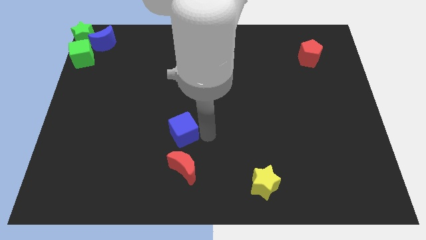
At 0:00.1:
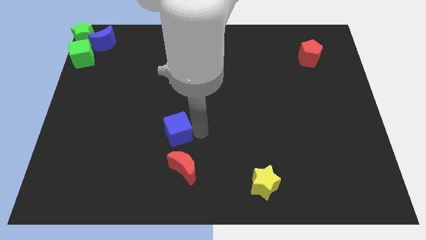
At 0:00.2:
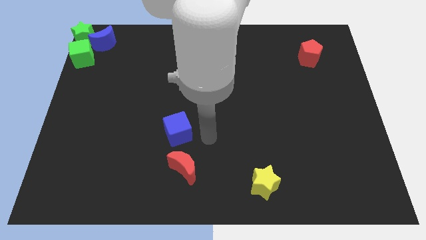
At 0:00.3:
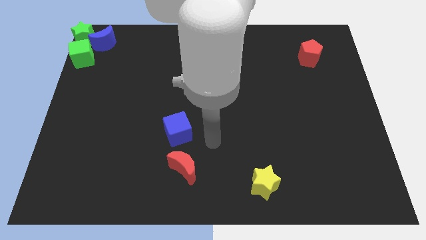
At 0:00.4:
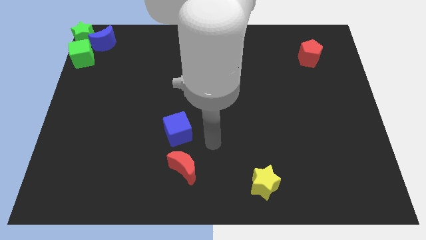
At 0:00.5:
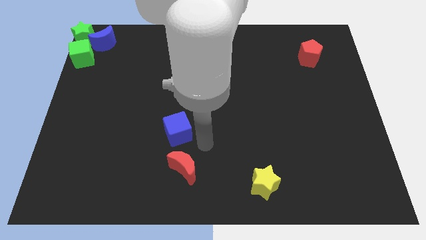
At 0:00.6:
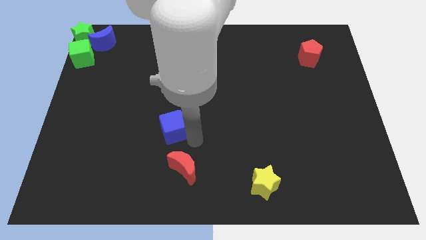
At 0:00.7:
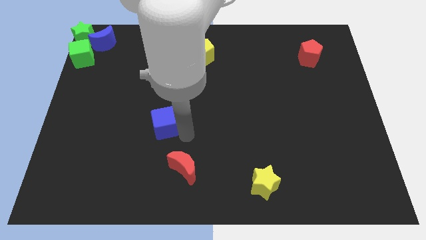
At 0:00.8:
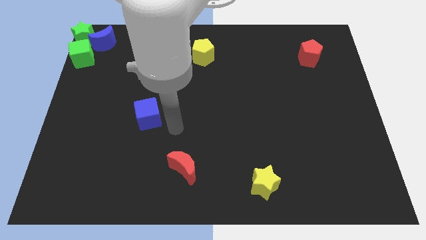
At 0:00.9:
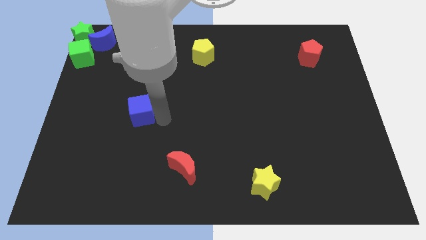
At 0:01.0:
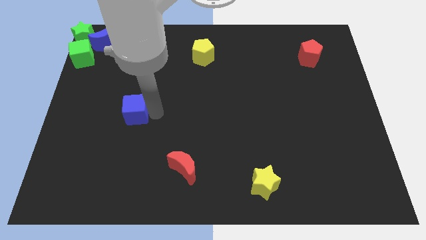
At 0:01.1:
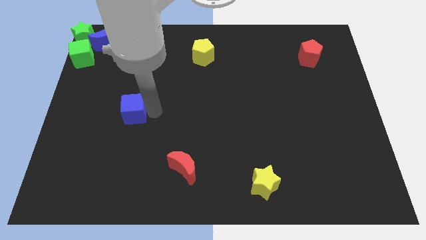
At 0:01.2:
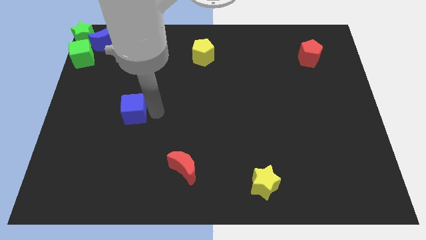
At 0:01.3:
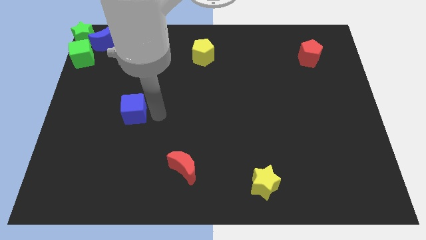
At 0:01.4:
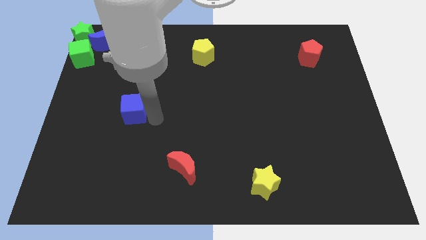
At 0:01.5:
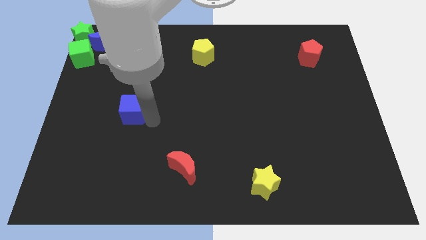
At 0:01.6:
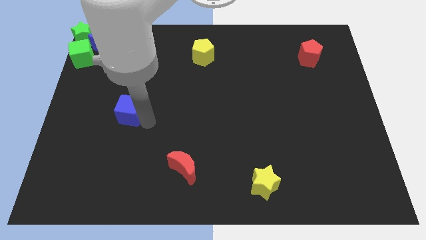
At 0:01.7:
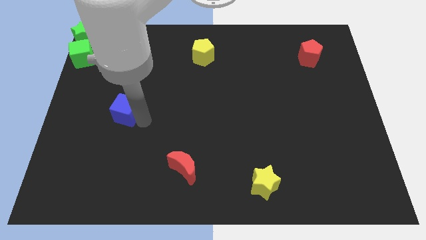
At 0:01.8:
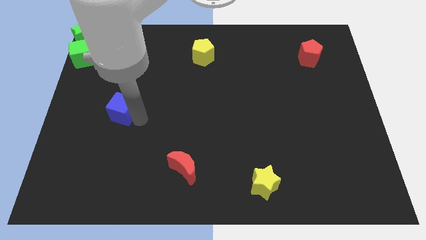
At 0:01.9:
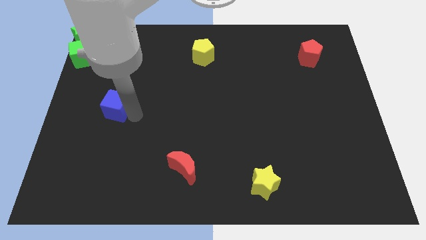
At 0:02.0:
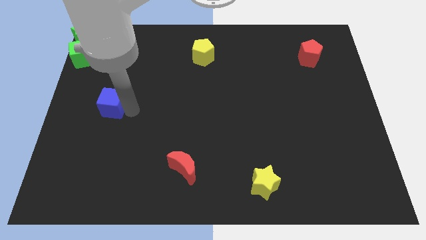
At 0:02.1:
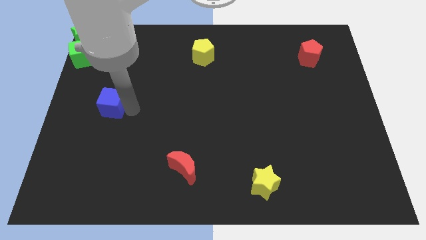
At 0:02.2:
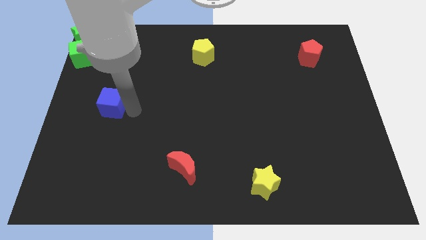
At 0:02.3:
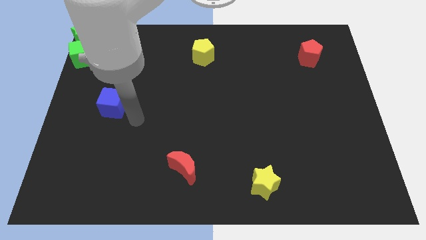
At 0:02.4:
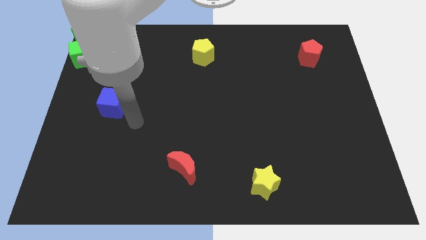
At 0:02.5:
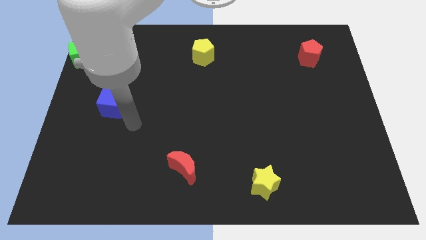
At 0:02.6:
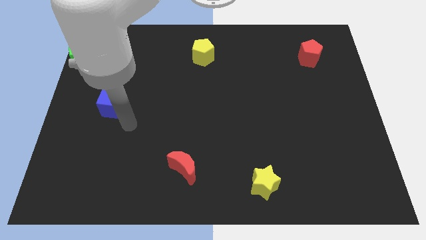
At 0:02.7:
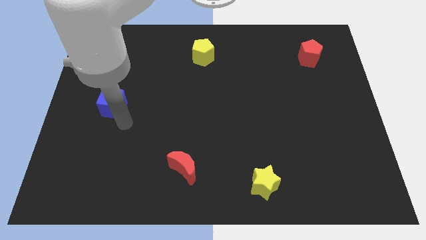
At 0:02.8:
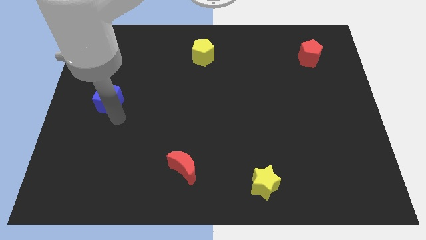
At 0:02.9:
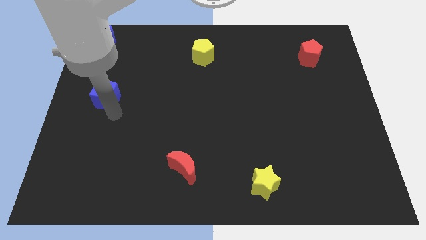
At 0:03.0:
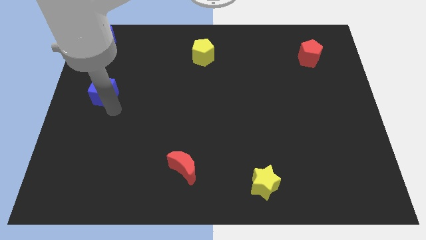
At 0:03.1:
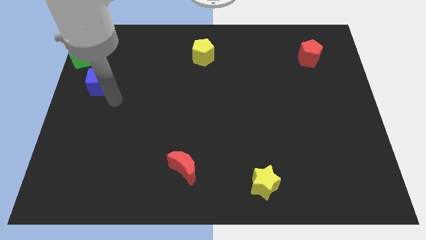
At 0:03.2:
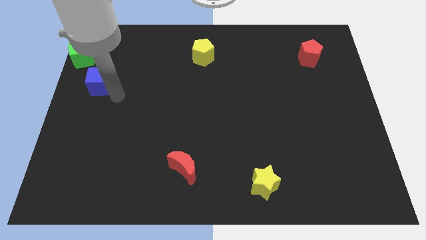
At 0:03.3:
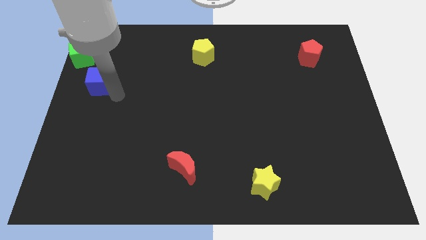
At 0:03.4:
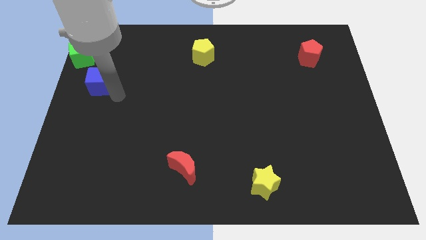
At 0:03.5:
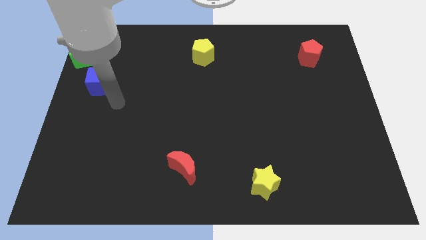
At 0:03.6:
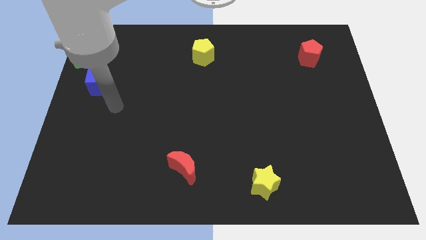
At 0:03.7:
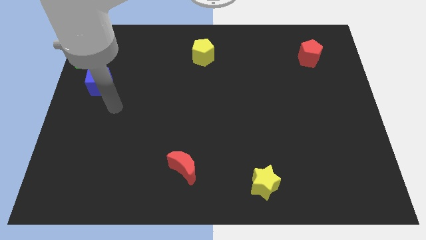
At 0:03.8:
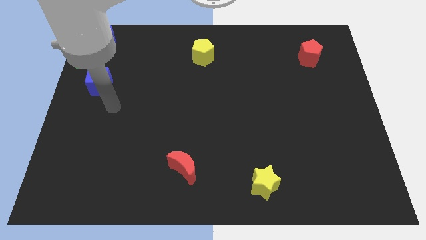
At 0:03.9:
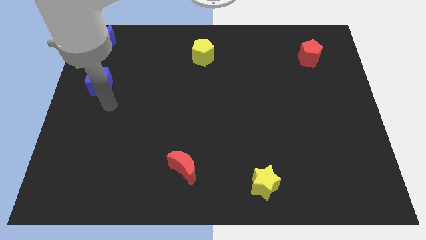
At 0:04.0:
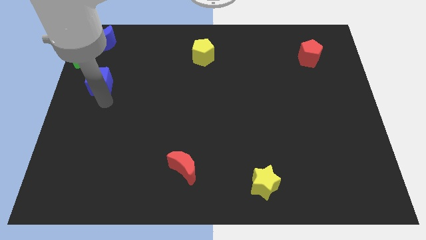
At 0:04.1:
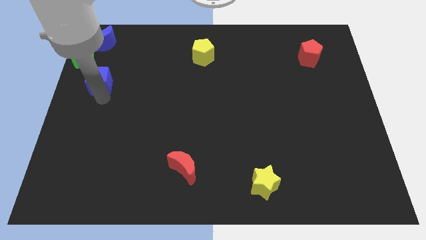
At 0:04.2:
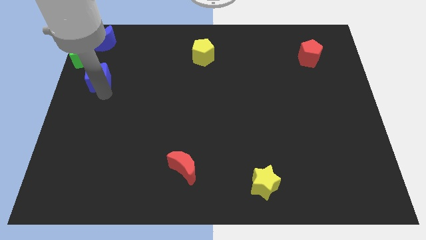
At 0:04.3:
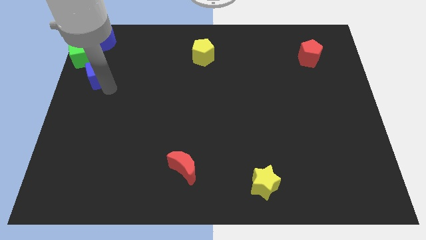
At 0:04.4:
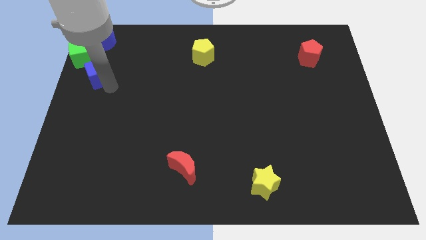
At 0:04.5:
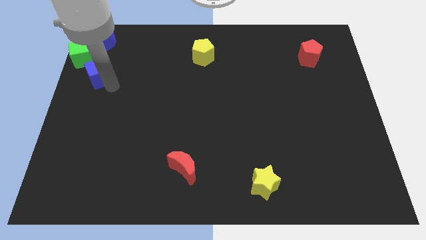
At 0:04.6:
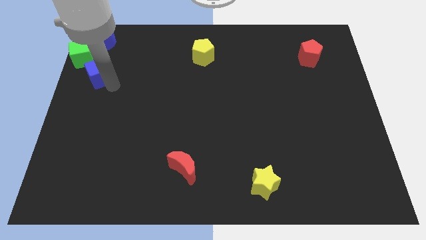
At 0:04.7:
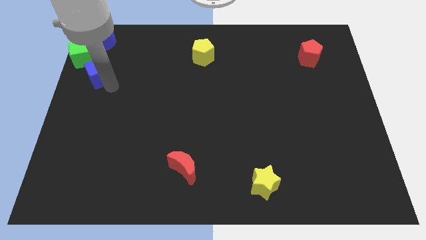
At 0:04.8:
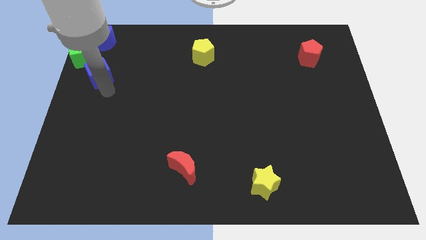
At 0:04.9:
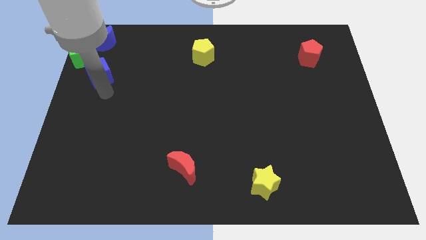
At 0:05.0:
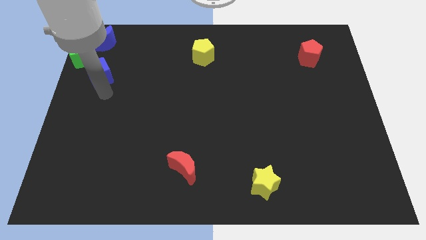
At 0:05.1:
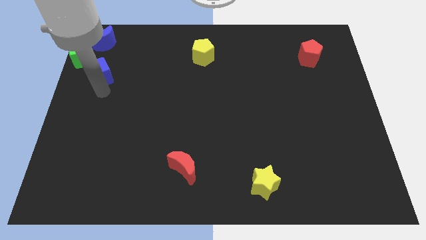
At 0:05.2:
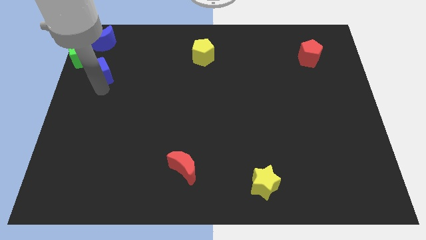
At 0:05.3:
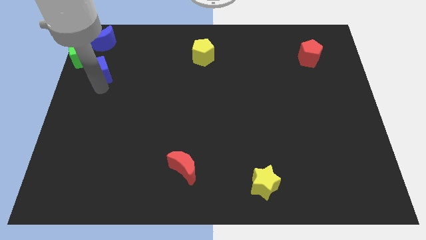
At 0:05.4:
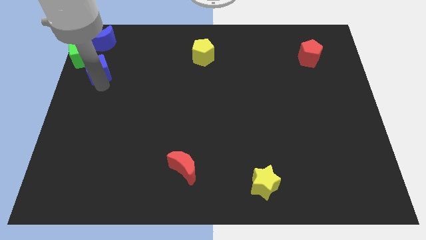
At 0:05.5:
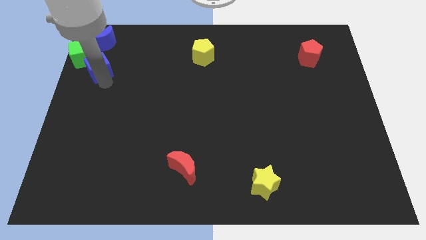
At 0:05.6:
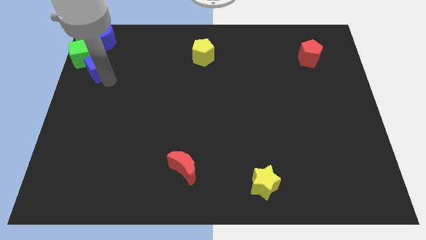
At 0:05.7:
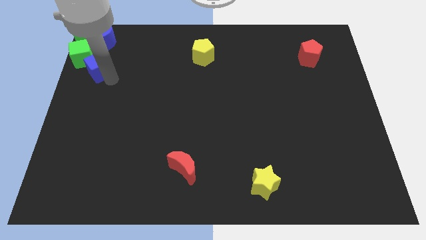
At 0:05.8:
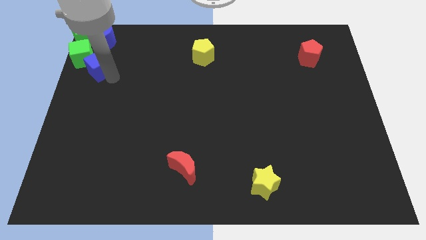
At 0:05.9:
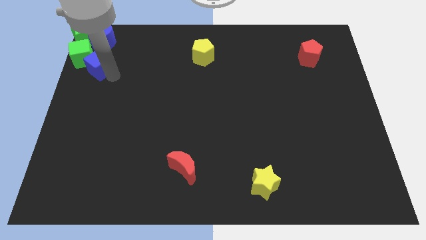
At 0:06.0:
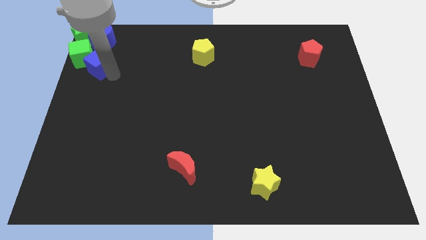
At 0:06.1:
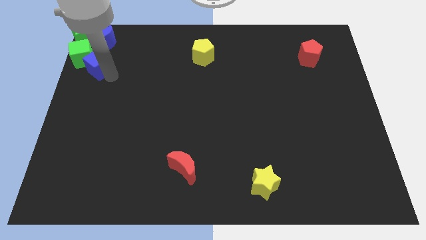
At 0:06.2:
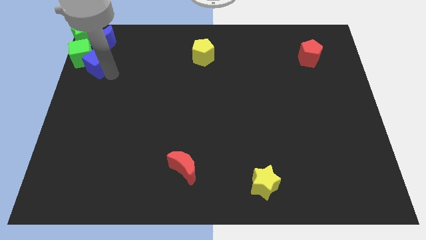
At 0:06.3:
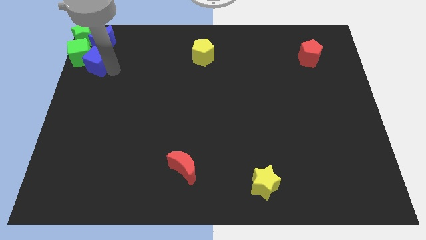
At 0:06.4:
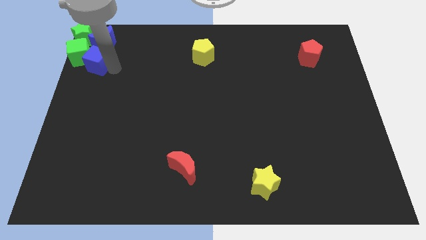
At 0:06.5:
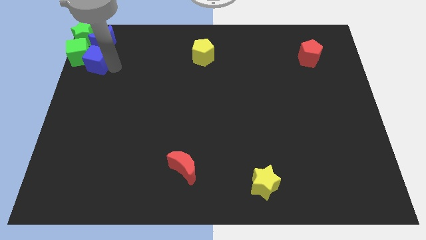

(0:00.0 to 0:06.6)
push the blue cube to the right of the green cube

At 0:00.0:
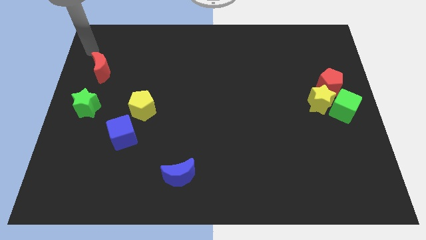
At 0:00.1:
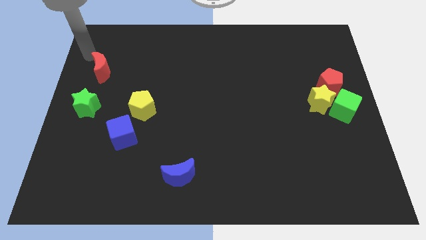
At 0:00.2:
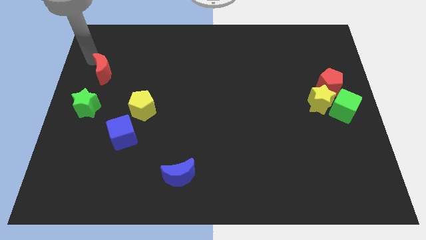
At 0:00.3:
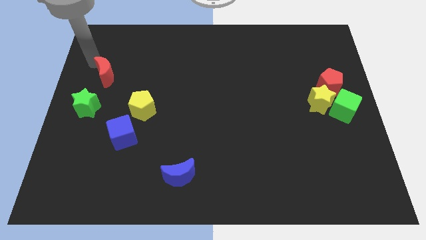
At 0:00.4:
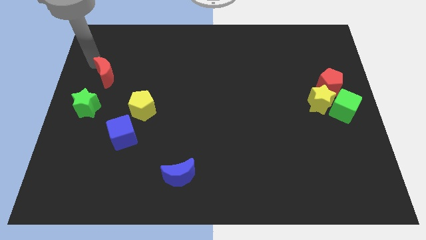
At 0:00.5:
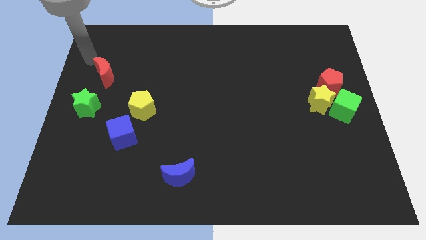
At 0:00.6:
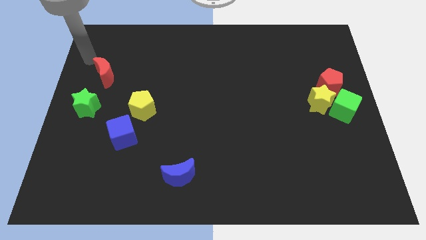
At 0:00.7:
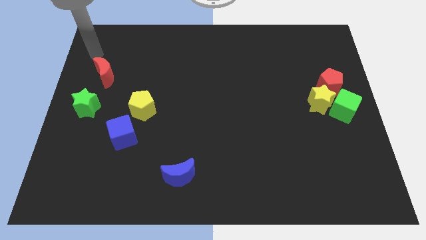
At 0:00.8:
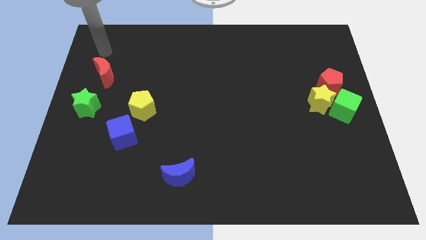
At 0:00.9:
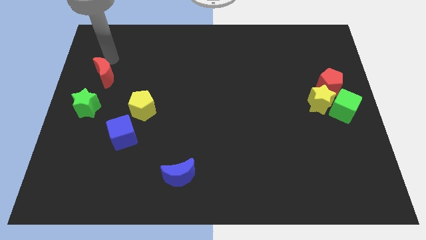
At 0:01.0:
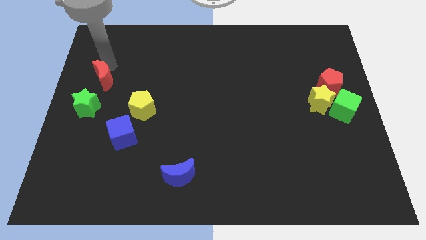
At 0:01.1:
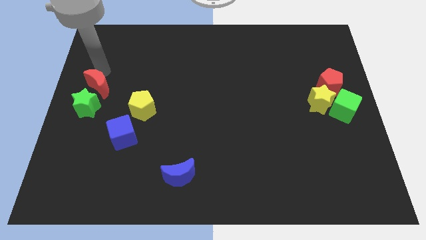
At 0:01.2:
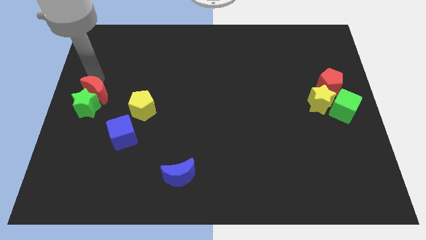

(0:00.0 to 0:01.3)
place red crescent above green star

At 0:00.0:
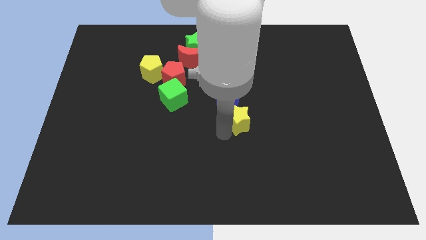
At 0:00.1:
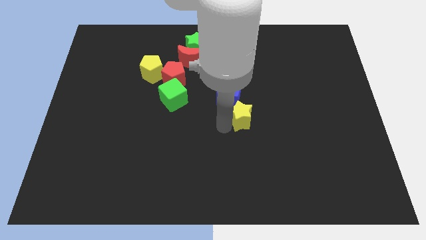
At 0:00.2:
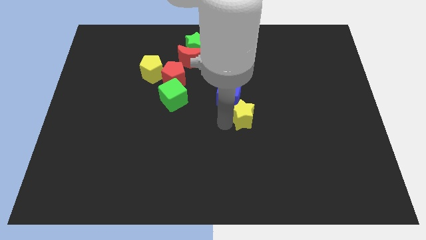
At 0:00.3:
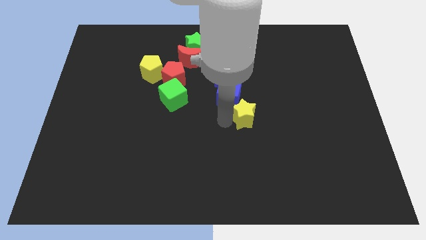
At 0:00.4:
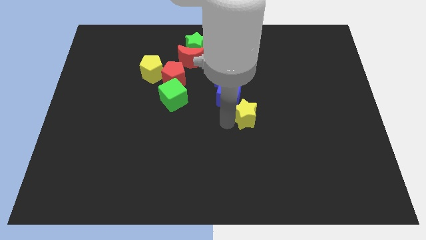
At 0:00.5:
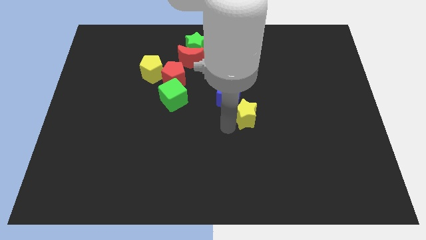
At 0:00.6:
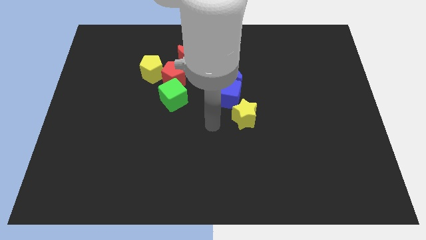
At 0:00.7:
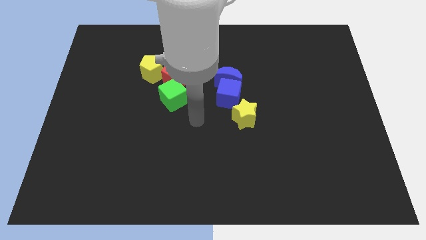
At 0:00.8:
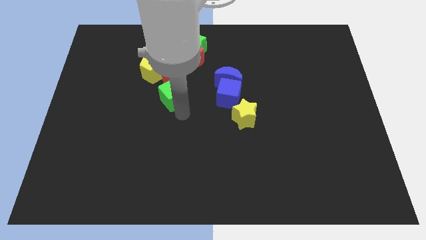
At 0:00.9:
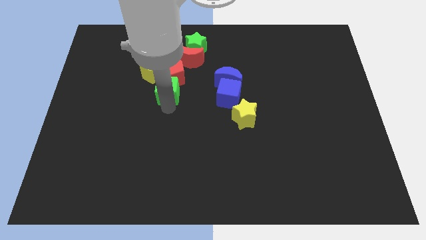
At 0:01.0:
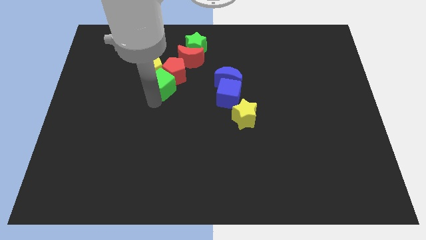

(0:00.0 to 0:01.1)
move your arm into the green cube
